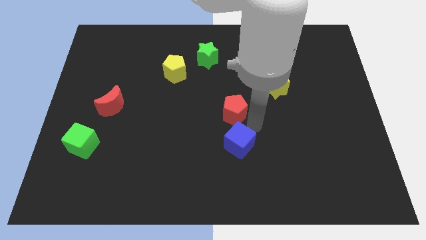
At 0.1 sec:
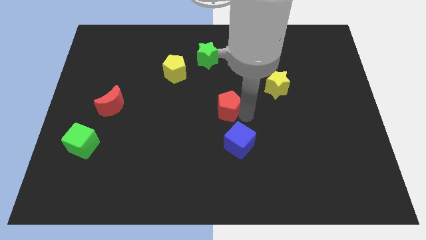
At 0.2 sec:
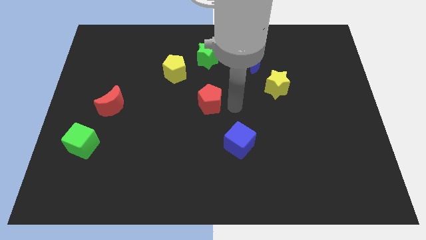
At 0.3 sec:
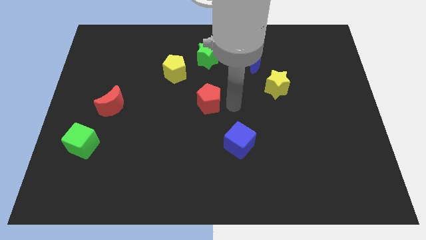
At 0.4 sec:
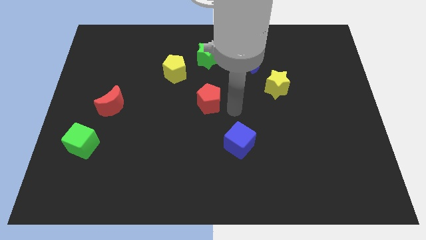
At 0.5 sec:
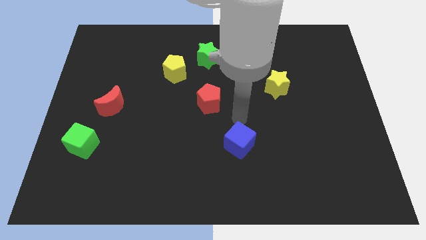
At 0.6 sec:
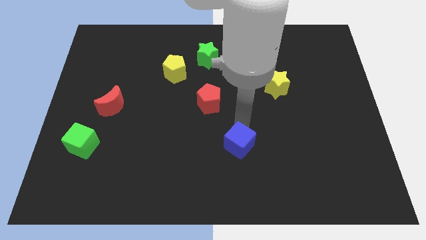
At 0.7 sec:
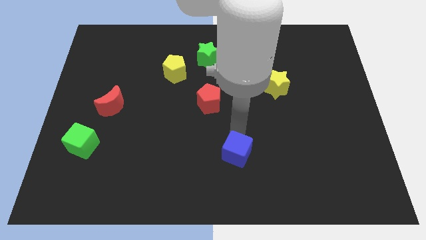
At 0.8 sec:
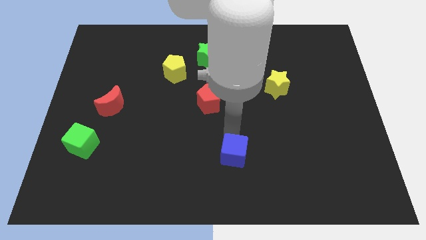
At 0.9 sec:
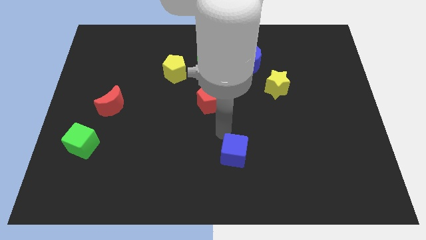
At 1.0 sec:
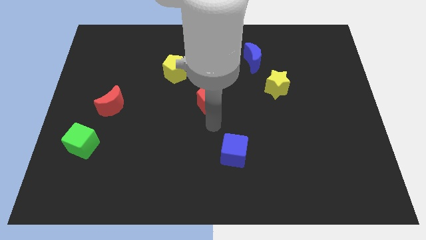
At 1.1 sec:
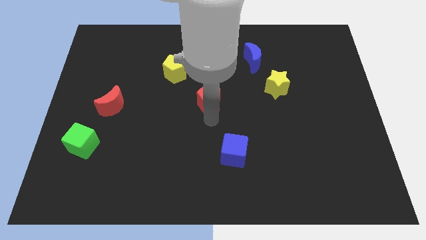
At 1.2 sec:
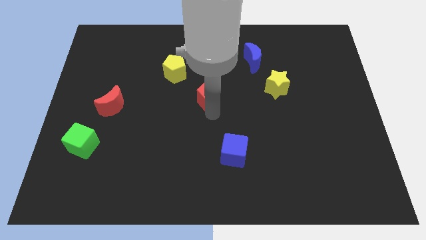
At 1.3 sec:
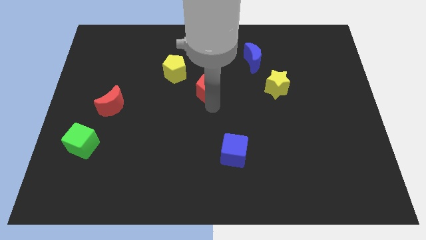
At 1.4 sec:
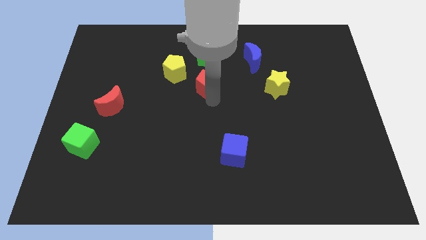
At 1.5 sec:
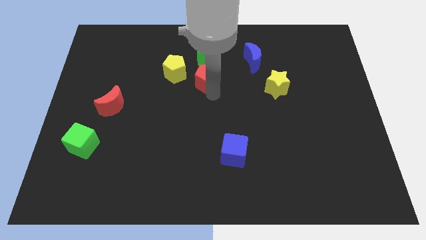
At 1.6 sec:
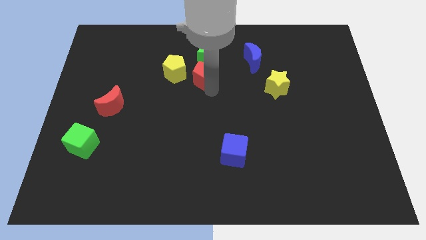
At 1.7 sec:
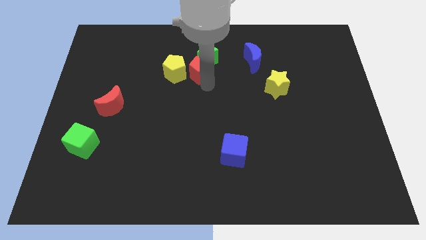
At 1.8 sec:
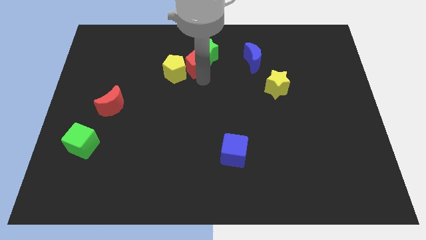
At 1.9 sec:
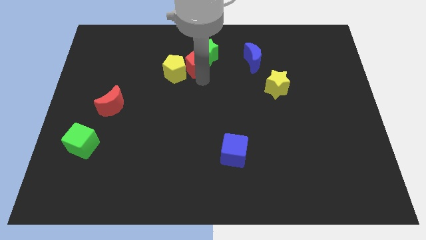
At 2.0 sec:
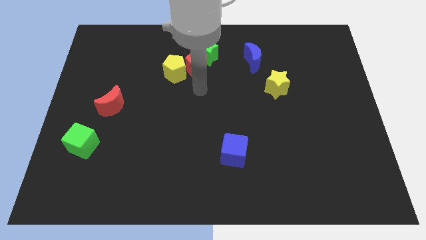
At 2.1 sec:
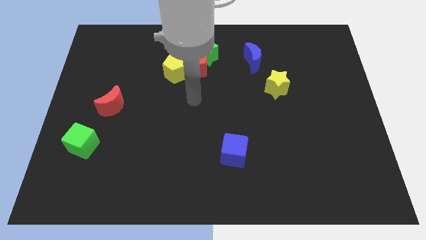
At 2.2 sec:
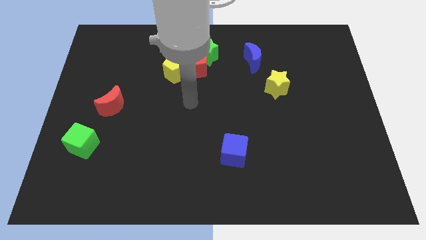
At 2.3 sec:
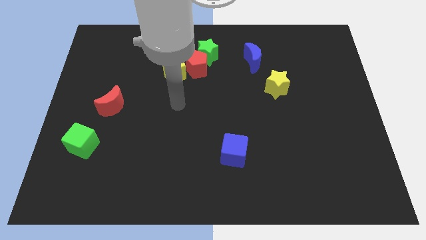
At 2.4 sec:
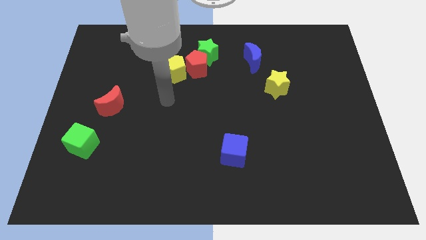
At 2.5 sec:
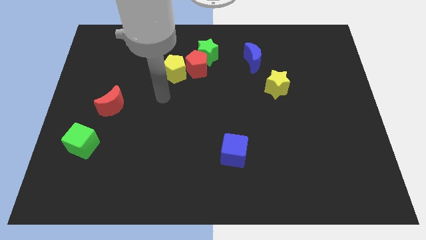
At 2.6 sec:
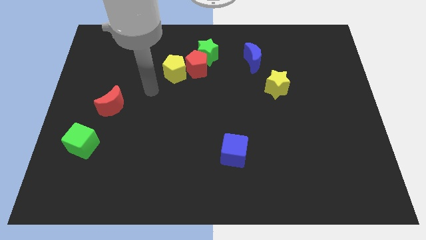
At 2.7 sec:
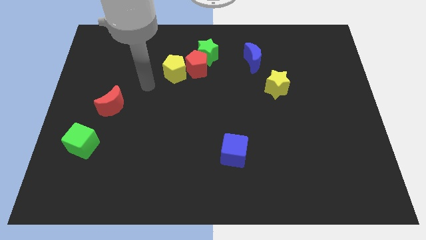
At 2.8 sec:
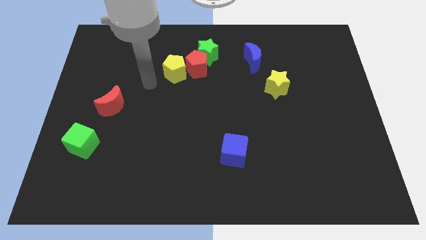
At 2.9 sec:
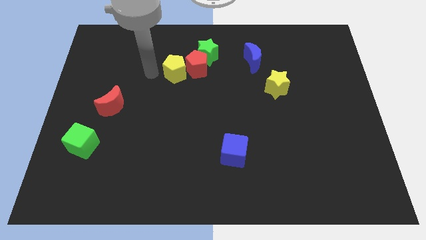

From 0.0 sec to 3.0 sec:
place the red pentagon between yellow pentagon and green star

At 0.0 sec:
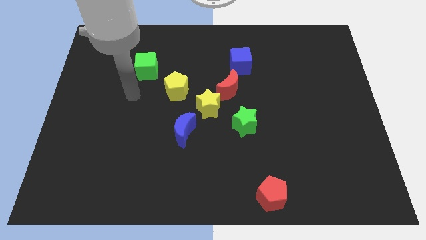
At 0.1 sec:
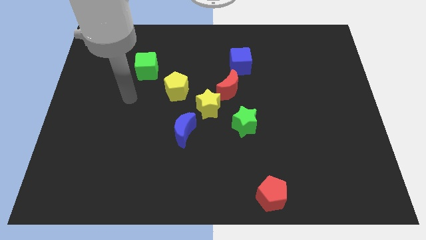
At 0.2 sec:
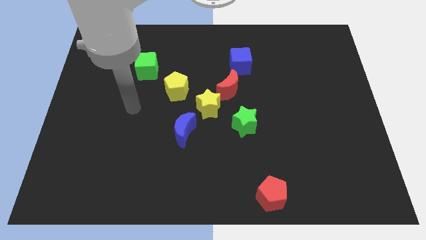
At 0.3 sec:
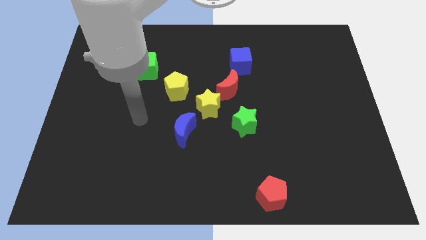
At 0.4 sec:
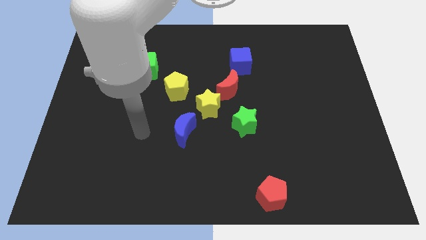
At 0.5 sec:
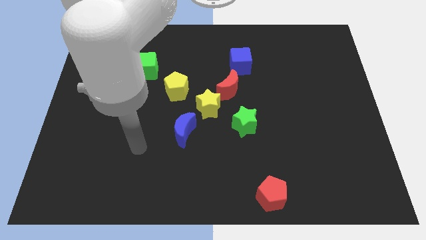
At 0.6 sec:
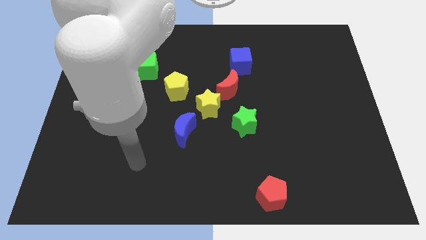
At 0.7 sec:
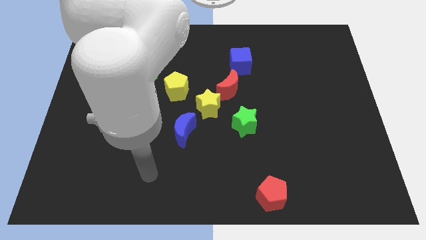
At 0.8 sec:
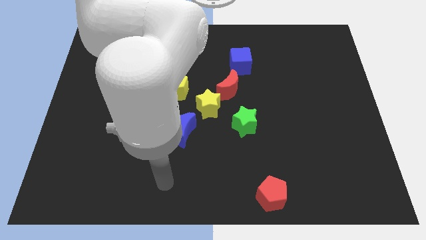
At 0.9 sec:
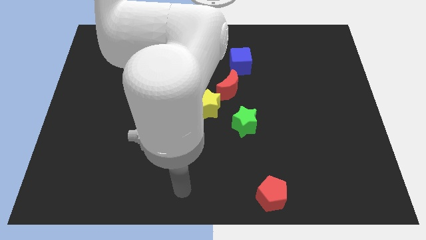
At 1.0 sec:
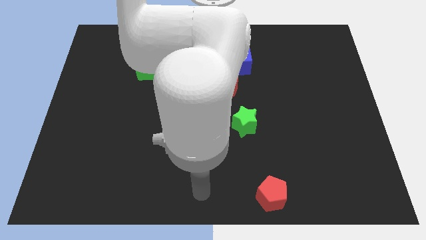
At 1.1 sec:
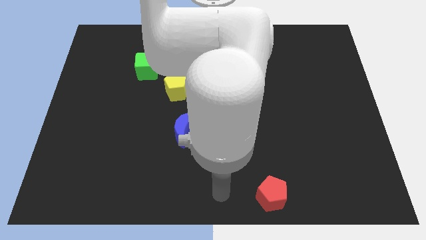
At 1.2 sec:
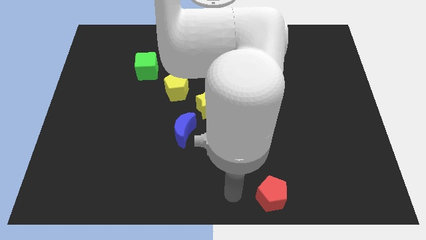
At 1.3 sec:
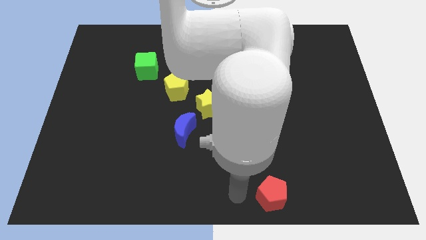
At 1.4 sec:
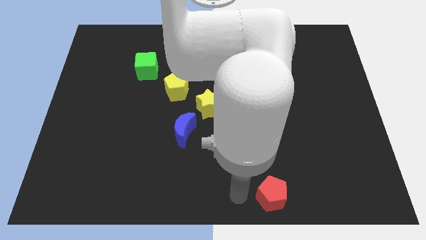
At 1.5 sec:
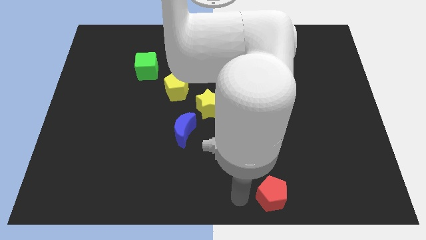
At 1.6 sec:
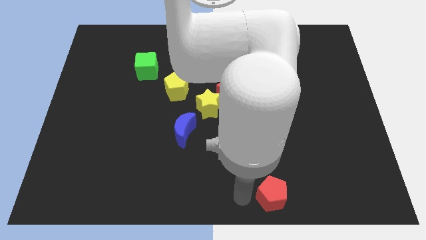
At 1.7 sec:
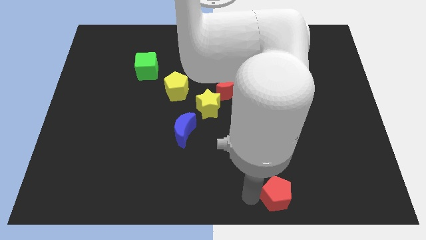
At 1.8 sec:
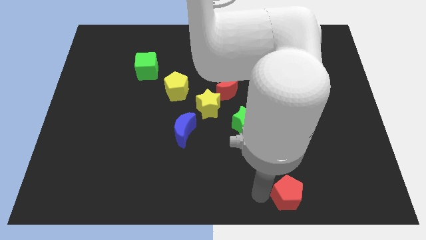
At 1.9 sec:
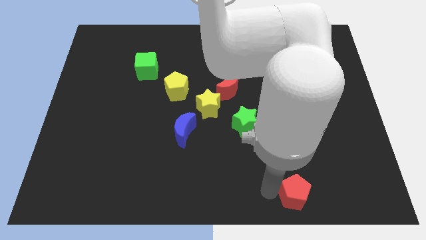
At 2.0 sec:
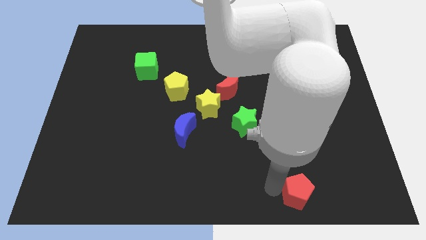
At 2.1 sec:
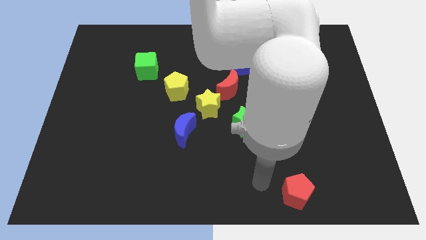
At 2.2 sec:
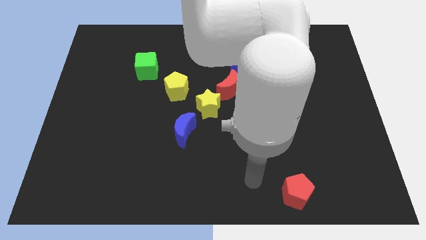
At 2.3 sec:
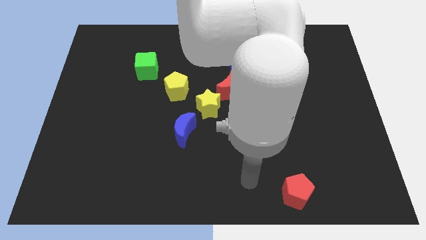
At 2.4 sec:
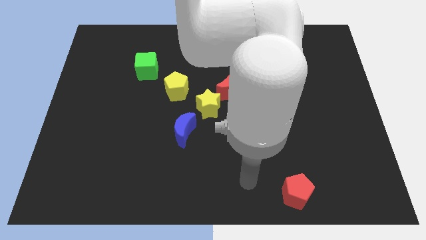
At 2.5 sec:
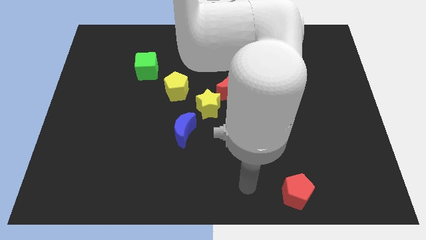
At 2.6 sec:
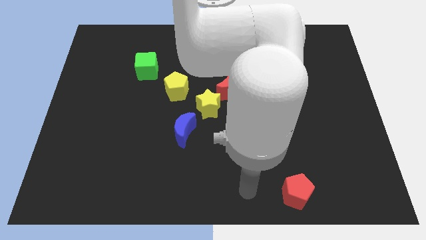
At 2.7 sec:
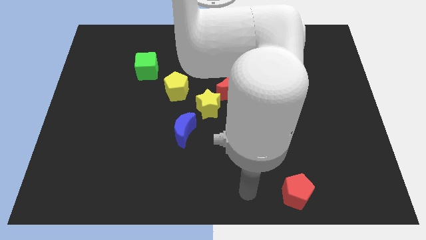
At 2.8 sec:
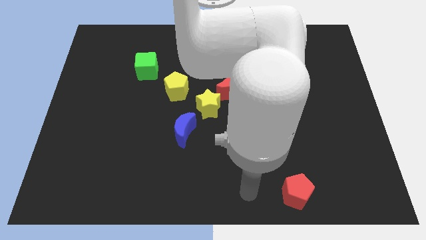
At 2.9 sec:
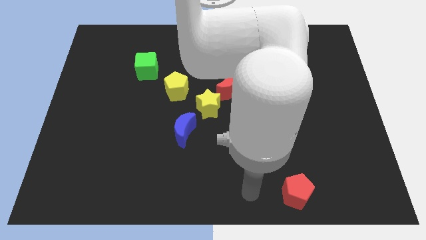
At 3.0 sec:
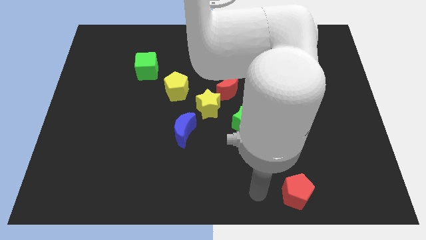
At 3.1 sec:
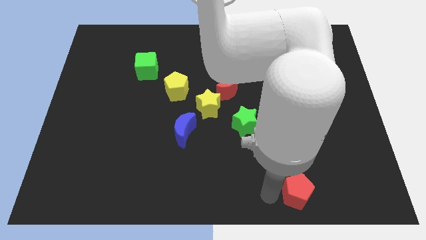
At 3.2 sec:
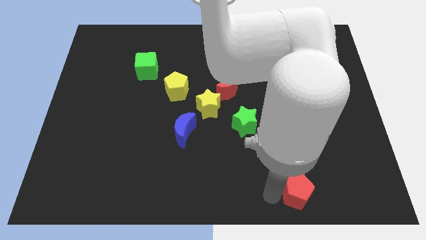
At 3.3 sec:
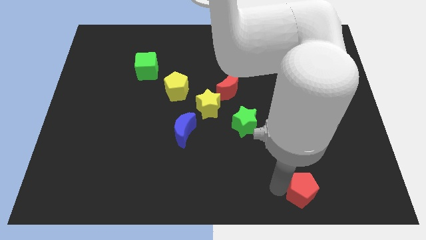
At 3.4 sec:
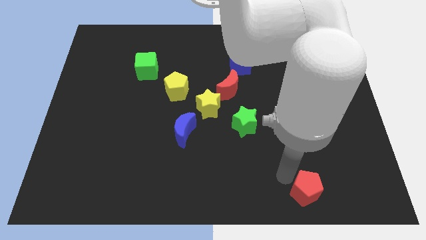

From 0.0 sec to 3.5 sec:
move red pentagon to the right

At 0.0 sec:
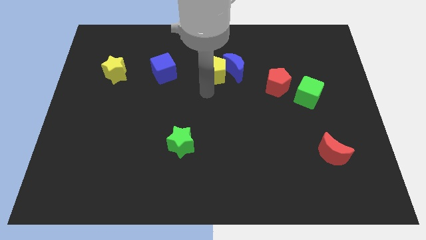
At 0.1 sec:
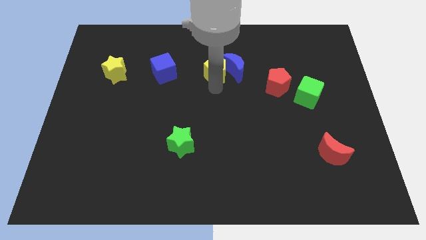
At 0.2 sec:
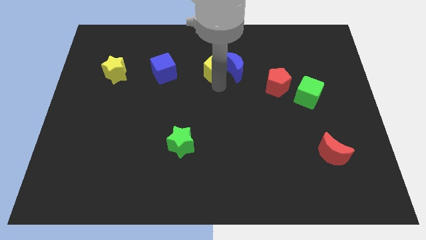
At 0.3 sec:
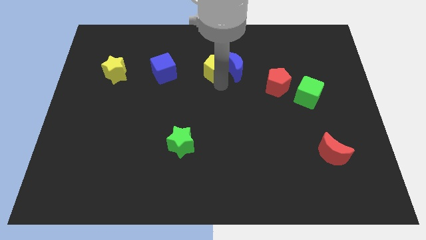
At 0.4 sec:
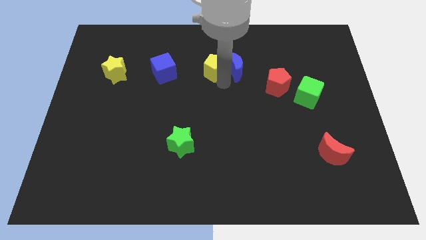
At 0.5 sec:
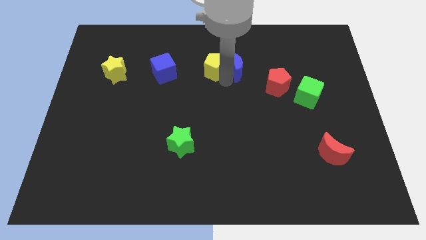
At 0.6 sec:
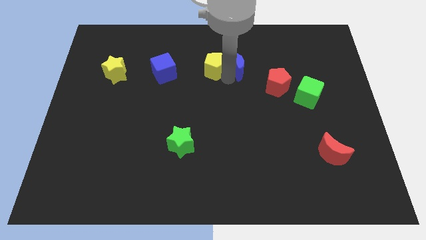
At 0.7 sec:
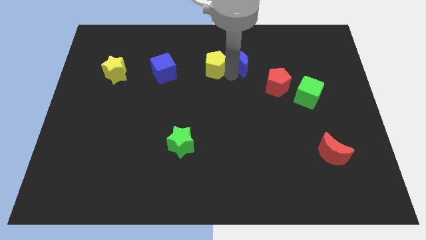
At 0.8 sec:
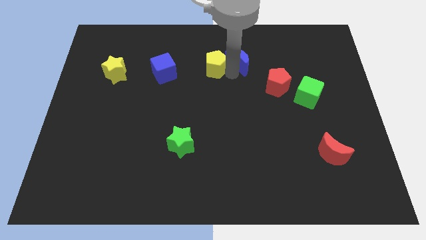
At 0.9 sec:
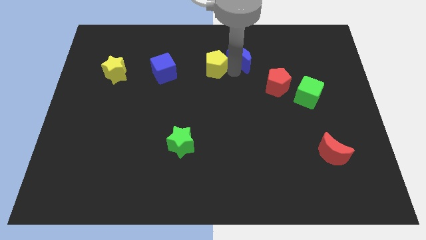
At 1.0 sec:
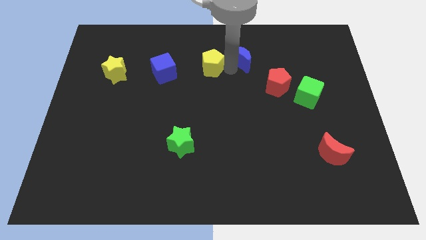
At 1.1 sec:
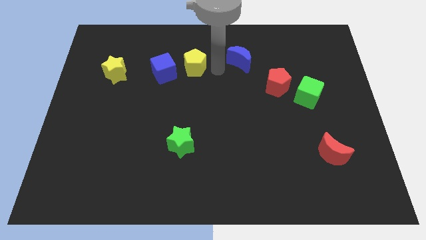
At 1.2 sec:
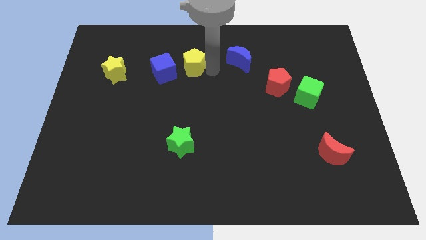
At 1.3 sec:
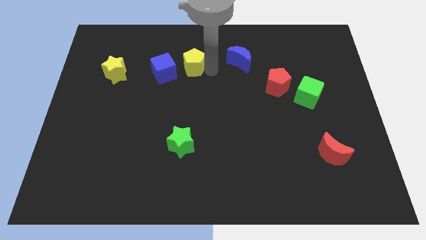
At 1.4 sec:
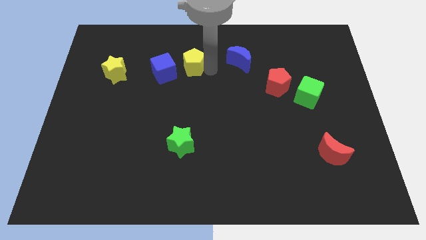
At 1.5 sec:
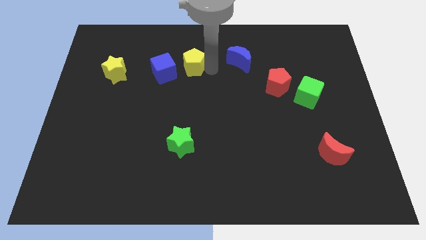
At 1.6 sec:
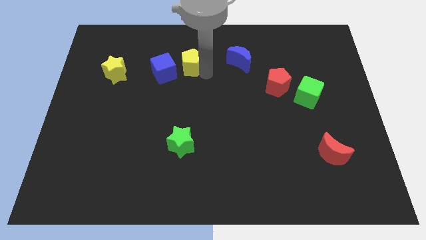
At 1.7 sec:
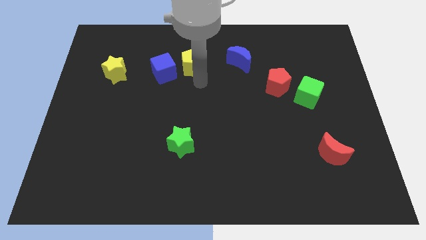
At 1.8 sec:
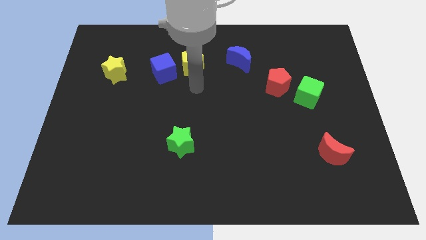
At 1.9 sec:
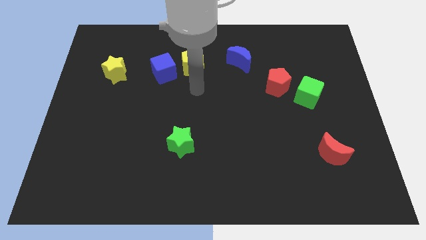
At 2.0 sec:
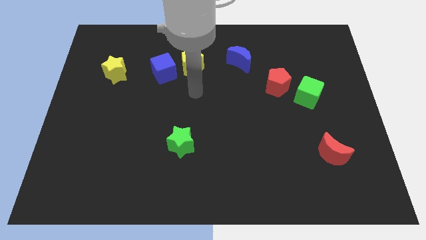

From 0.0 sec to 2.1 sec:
push the yellow pentagon to the right side of blue cube

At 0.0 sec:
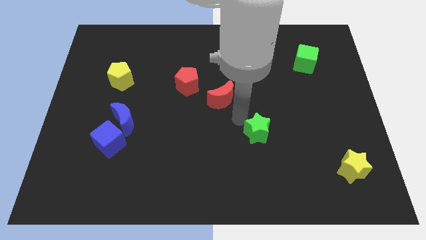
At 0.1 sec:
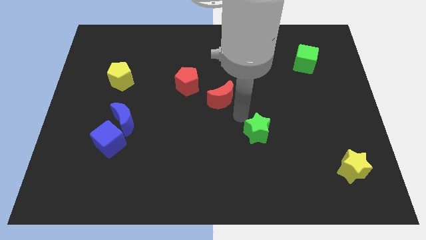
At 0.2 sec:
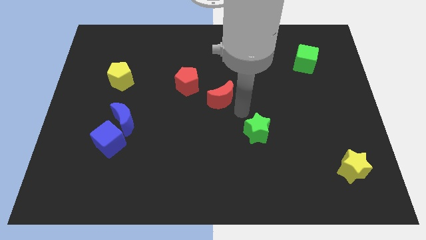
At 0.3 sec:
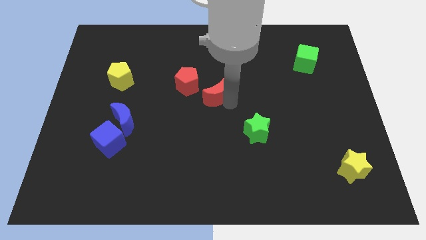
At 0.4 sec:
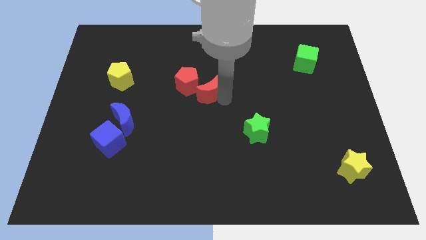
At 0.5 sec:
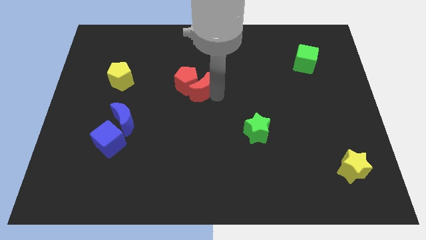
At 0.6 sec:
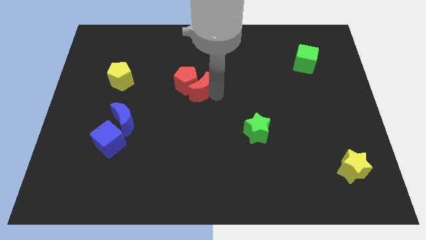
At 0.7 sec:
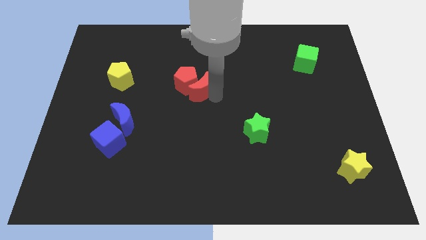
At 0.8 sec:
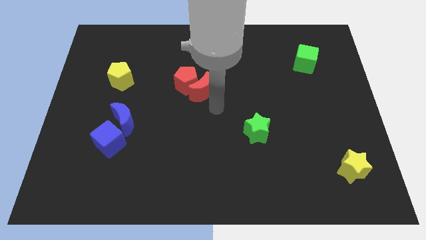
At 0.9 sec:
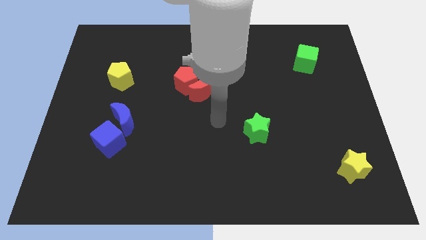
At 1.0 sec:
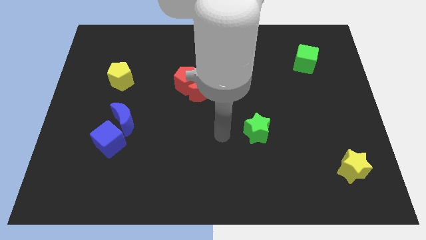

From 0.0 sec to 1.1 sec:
push the red moon into the red pentagon
